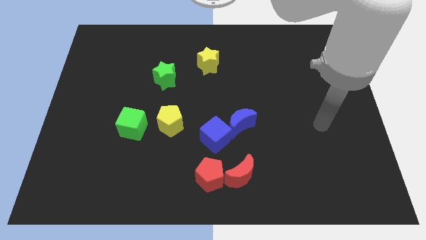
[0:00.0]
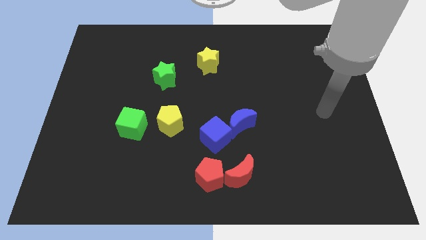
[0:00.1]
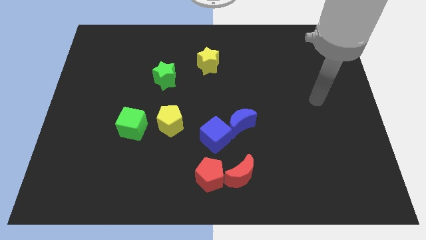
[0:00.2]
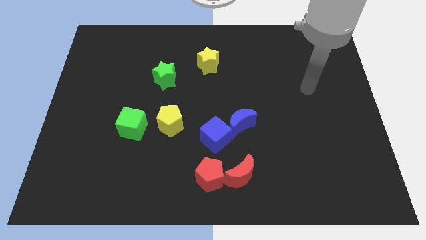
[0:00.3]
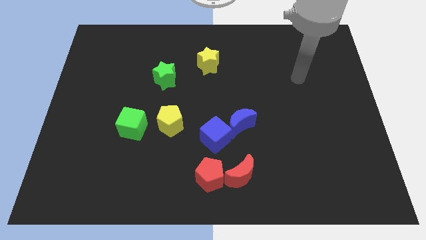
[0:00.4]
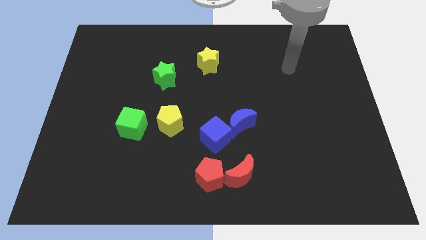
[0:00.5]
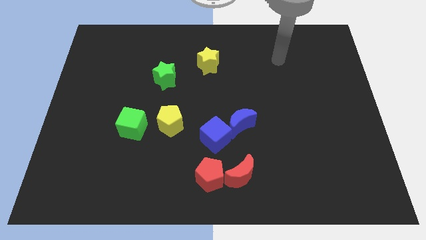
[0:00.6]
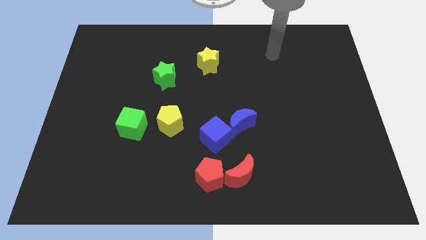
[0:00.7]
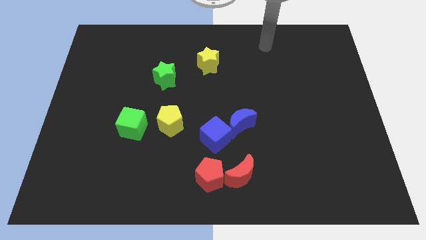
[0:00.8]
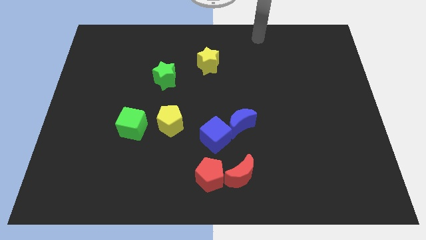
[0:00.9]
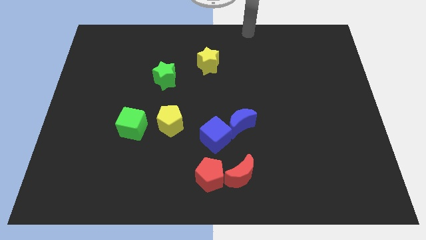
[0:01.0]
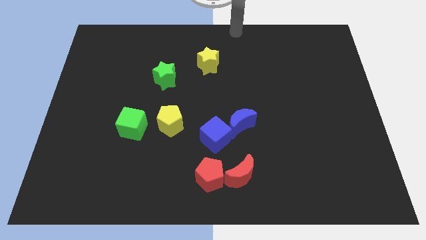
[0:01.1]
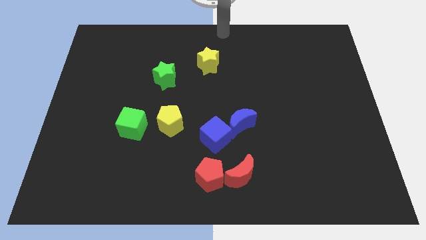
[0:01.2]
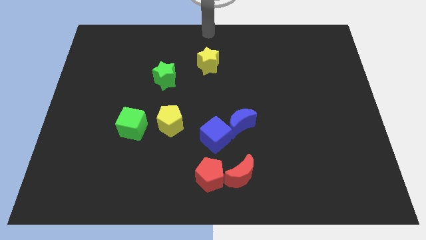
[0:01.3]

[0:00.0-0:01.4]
move your arm to the top center of the board

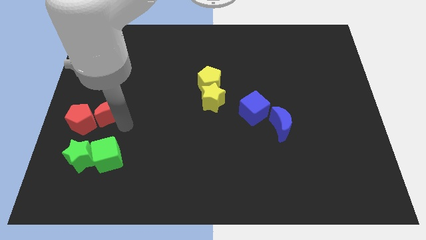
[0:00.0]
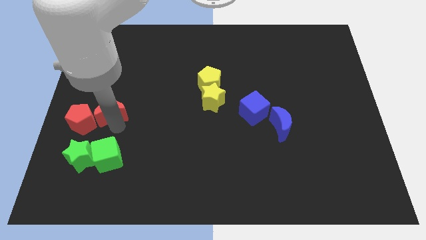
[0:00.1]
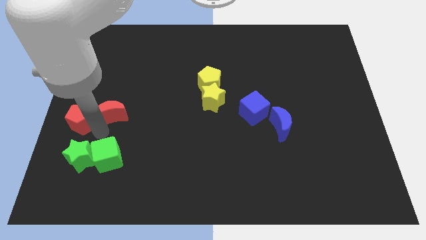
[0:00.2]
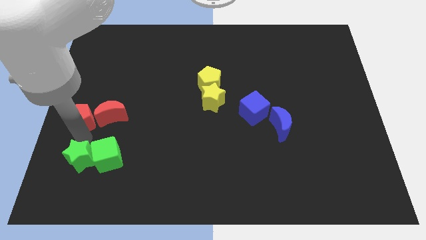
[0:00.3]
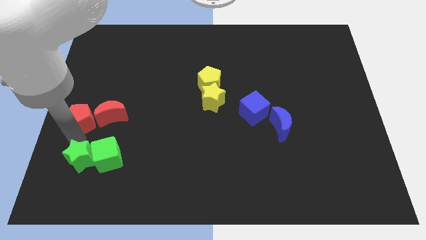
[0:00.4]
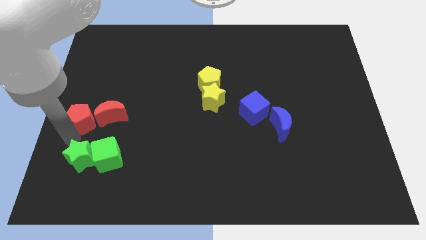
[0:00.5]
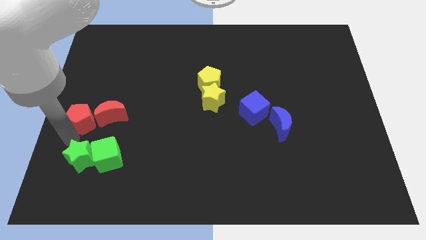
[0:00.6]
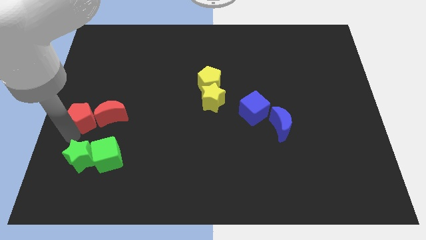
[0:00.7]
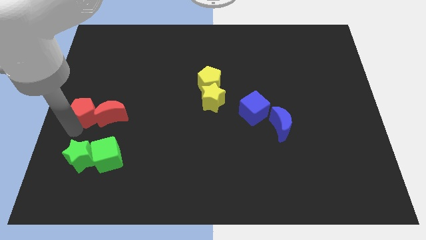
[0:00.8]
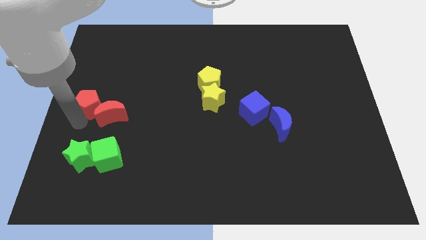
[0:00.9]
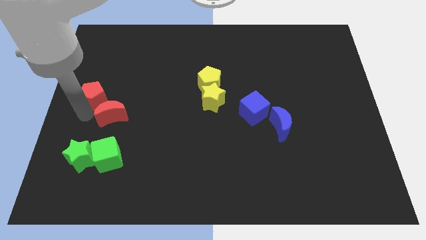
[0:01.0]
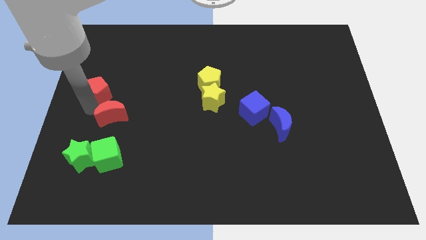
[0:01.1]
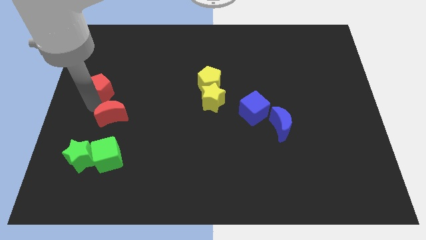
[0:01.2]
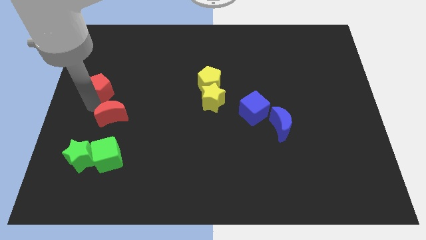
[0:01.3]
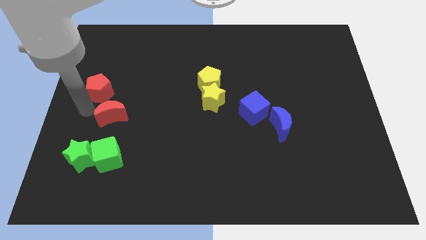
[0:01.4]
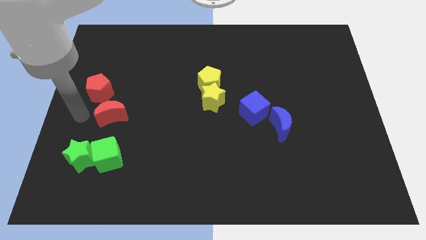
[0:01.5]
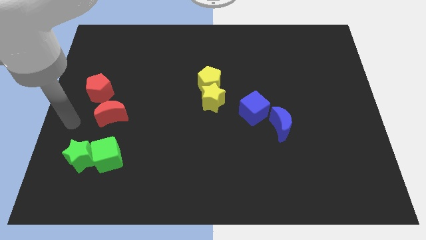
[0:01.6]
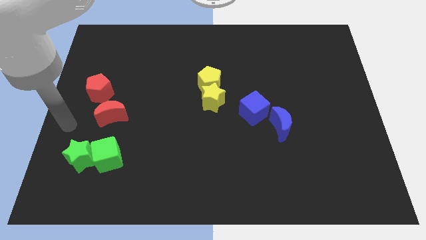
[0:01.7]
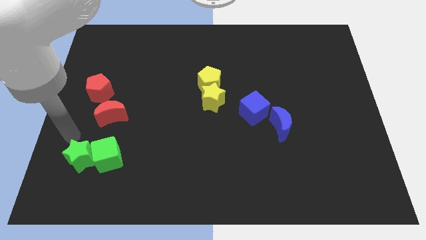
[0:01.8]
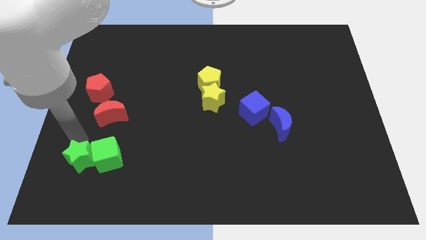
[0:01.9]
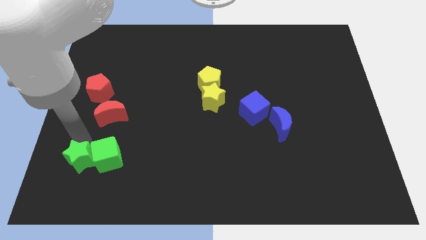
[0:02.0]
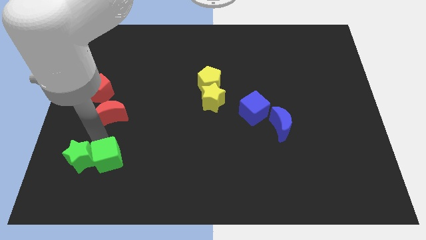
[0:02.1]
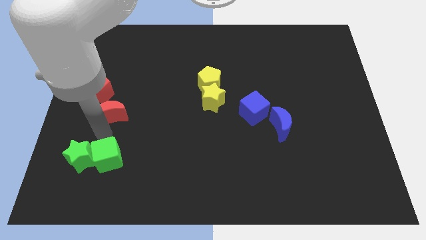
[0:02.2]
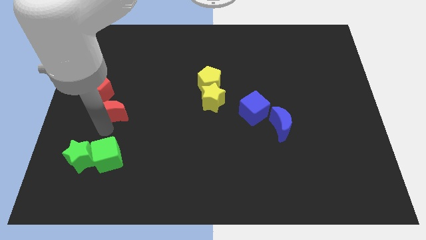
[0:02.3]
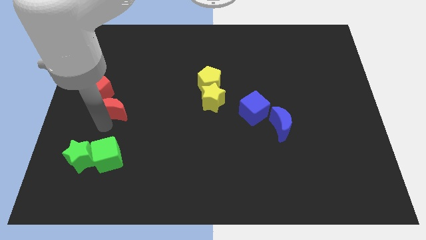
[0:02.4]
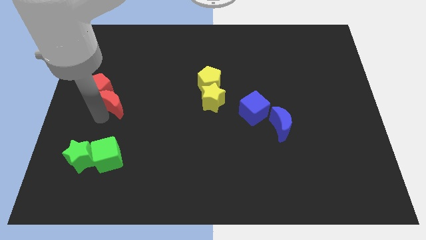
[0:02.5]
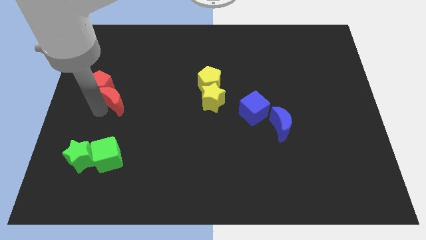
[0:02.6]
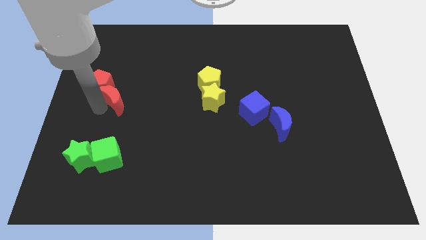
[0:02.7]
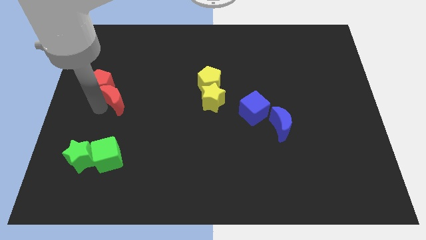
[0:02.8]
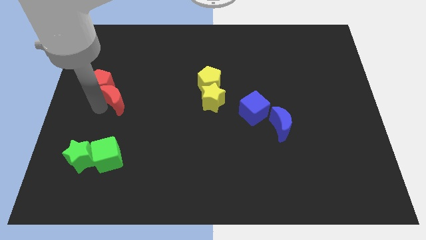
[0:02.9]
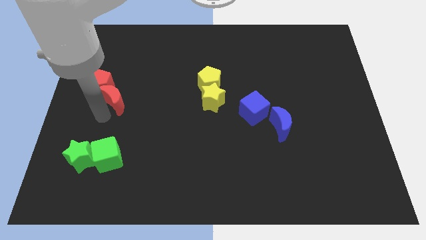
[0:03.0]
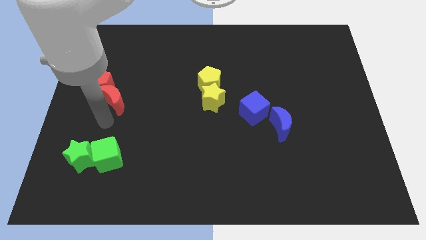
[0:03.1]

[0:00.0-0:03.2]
push red moon red pentagon towards upward

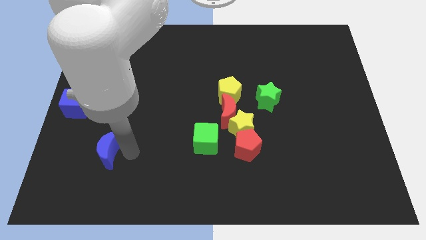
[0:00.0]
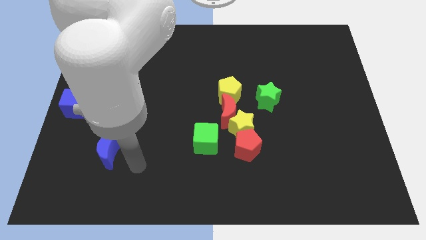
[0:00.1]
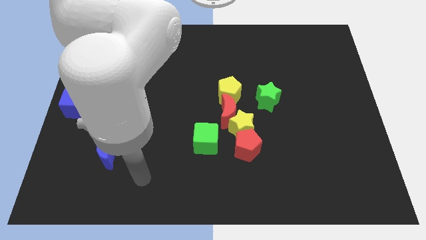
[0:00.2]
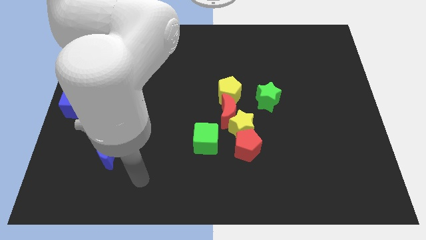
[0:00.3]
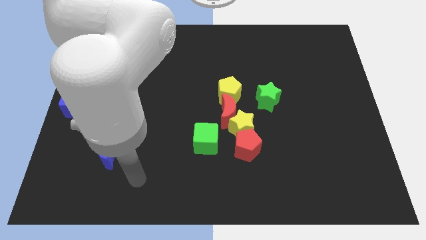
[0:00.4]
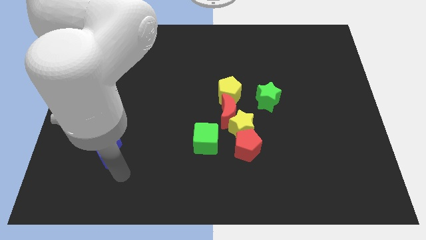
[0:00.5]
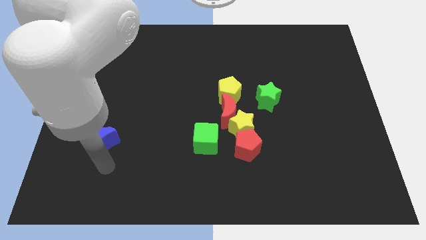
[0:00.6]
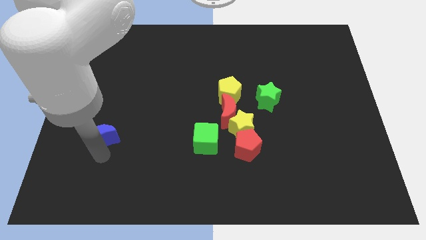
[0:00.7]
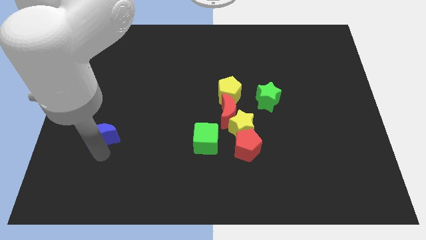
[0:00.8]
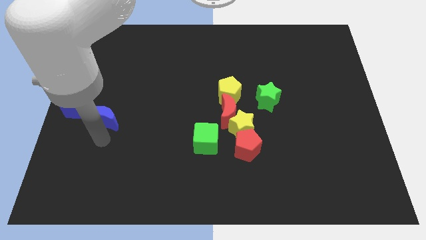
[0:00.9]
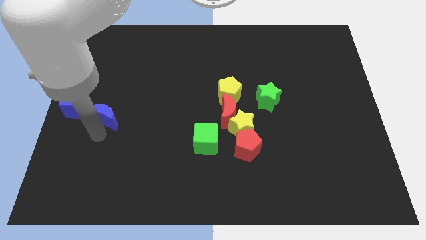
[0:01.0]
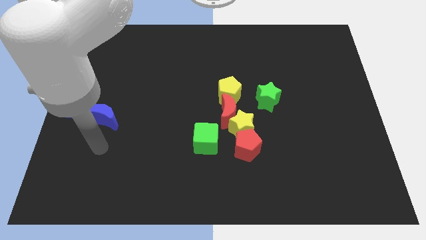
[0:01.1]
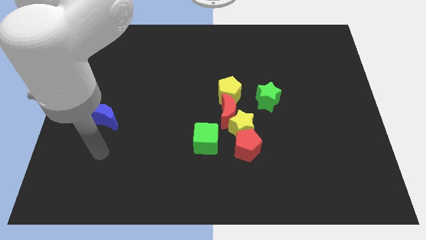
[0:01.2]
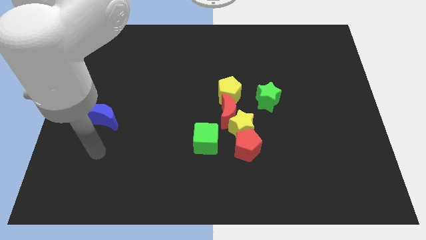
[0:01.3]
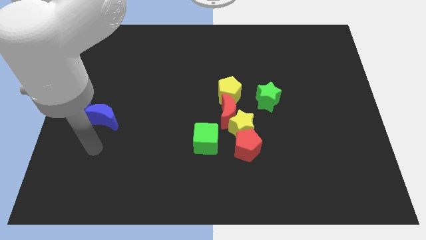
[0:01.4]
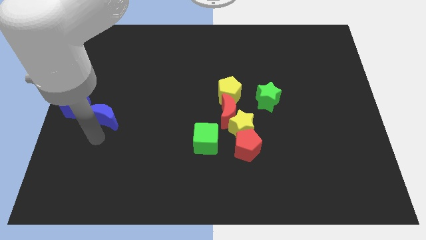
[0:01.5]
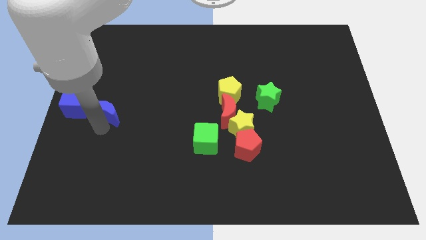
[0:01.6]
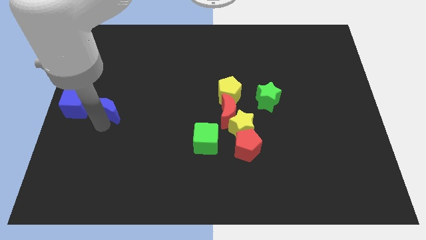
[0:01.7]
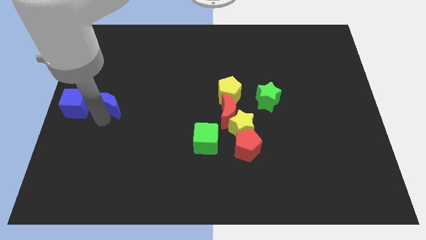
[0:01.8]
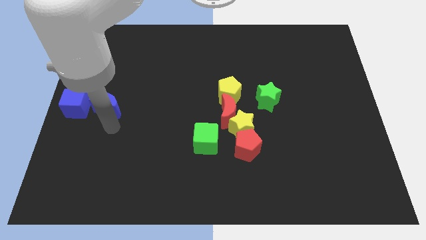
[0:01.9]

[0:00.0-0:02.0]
place the blue crescent to the right side of the blue cube

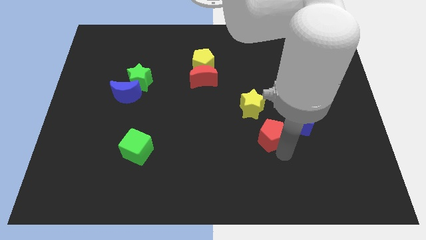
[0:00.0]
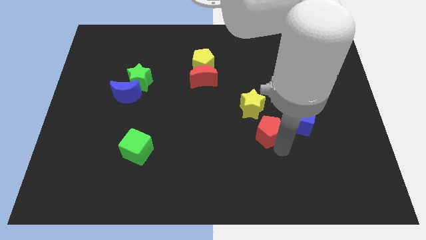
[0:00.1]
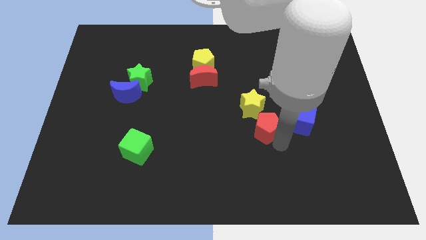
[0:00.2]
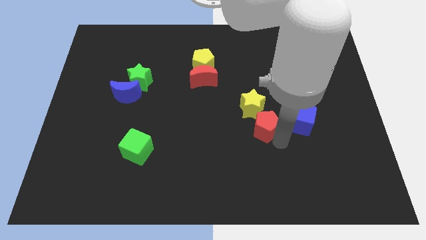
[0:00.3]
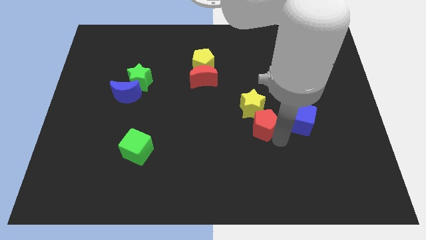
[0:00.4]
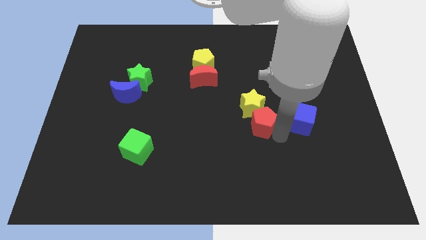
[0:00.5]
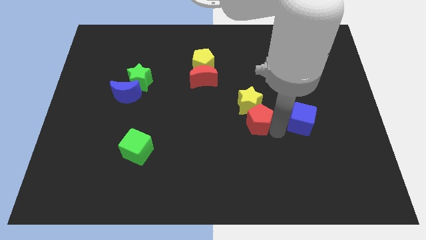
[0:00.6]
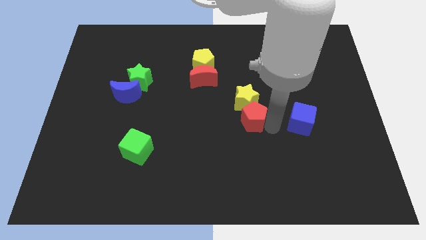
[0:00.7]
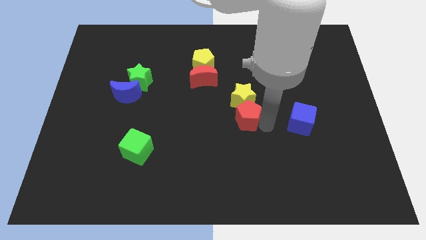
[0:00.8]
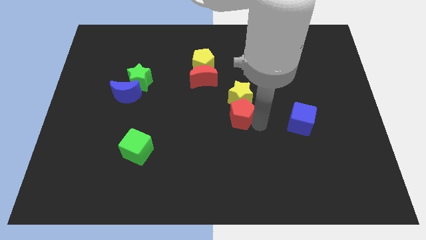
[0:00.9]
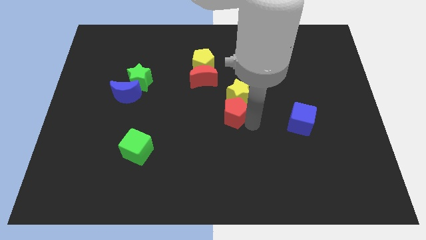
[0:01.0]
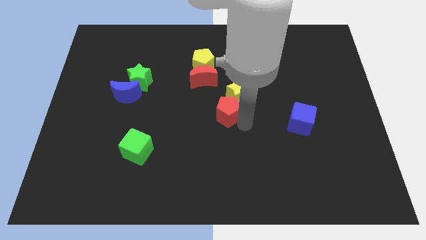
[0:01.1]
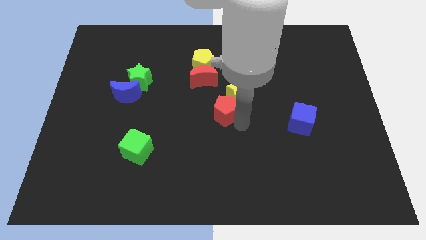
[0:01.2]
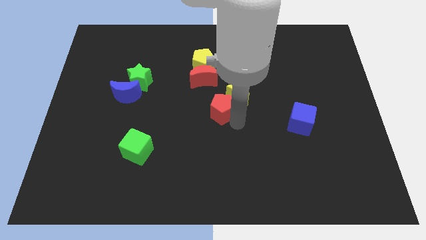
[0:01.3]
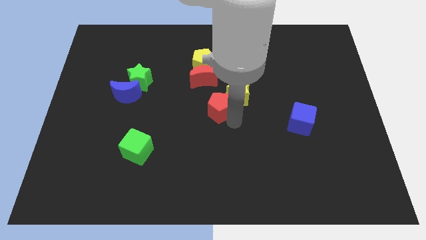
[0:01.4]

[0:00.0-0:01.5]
push the red pentagon into the yellow star

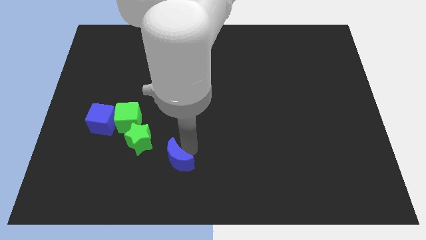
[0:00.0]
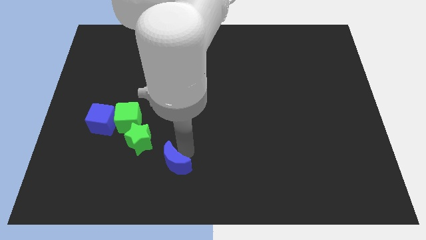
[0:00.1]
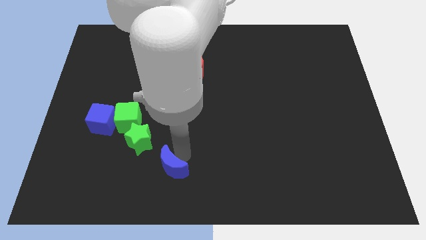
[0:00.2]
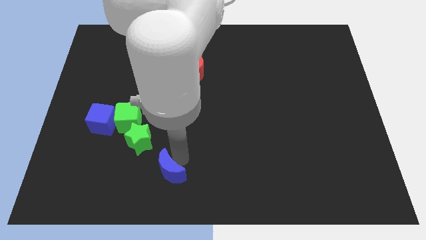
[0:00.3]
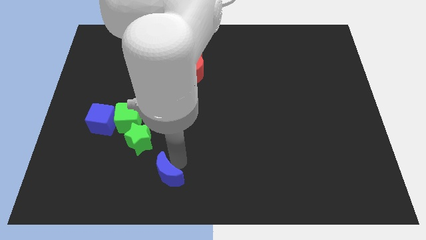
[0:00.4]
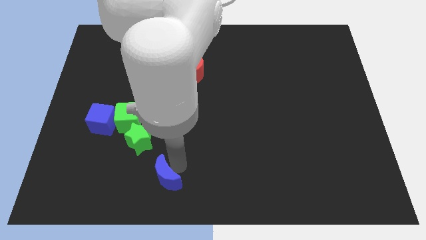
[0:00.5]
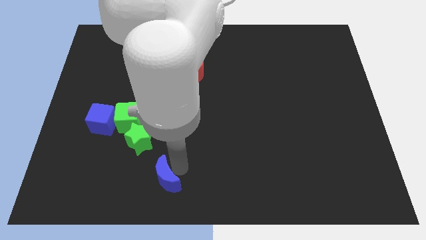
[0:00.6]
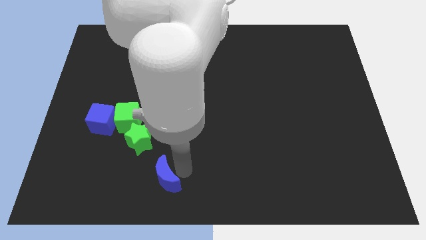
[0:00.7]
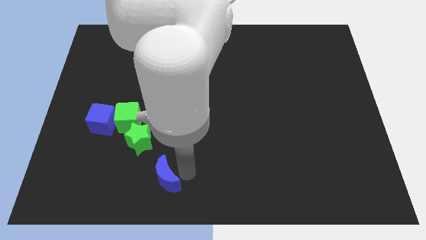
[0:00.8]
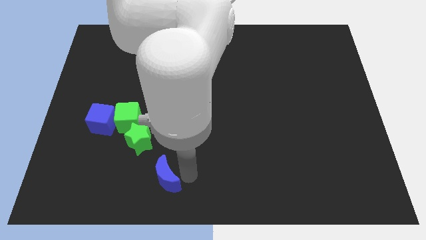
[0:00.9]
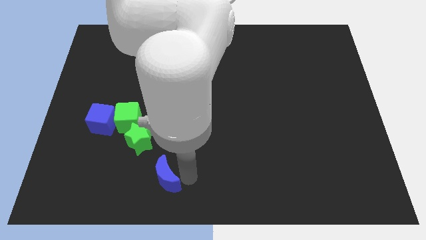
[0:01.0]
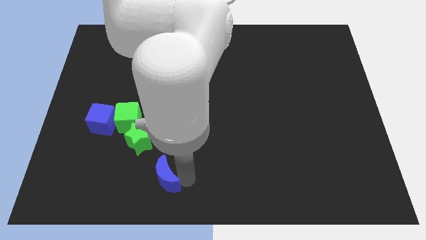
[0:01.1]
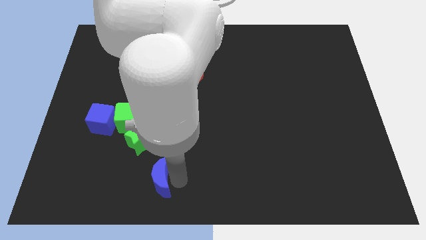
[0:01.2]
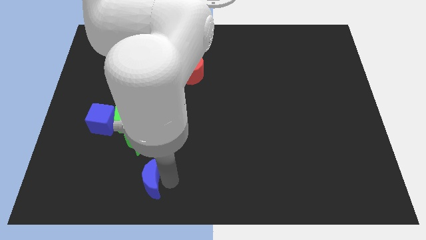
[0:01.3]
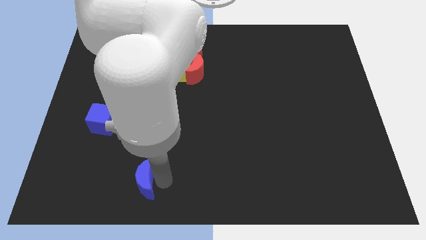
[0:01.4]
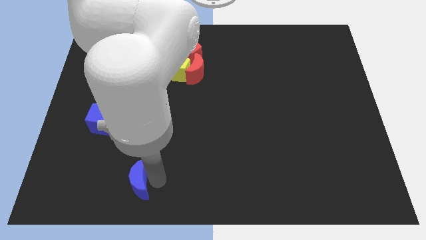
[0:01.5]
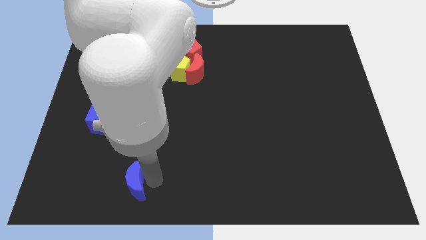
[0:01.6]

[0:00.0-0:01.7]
put the blue moon underneath the green star
